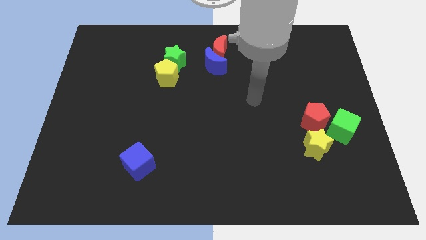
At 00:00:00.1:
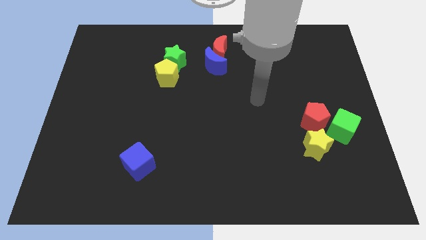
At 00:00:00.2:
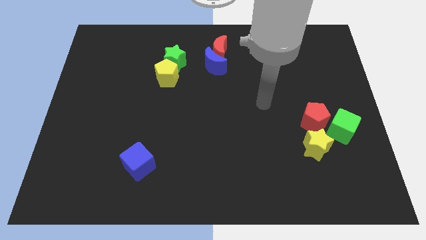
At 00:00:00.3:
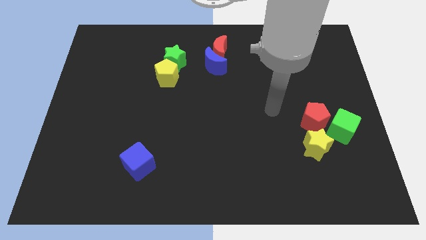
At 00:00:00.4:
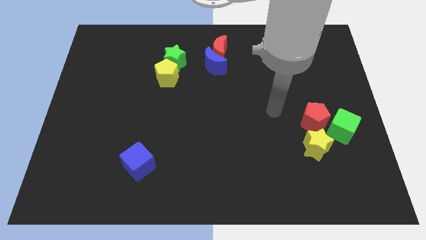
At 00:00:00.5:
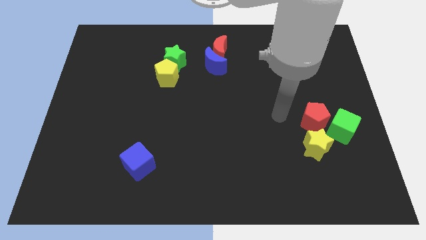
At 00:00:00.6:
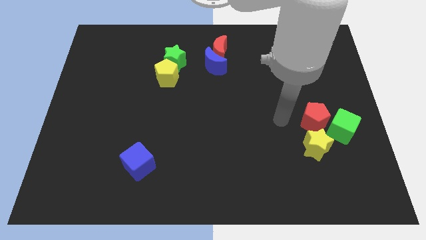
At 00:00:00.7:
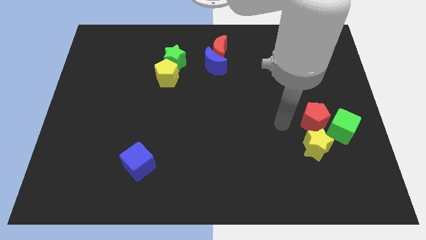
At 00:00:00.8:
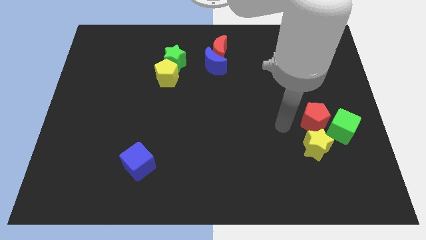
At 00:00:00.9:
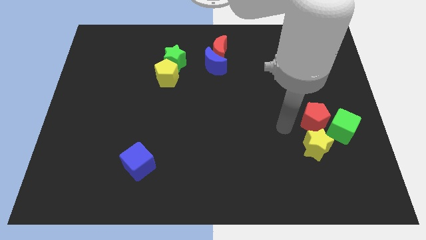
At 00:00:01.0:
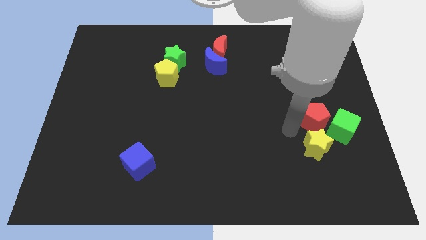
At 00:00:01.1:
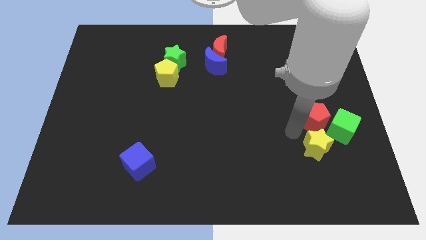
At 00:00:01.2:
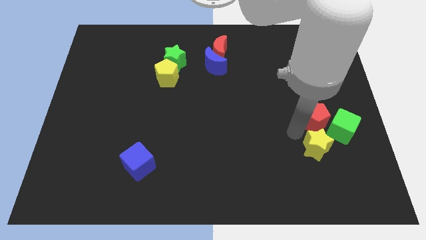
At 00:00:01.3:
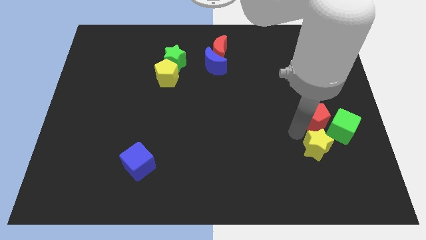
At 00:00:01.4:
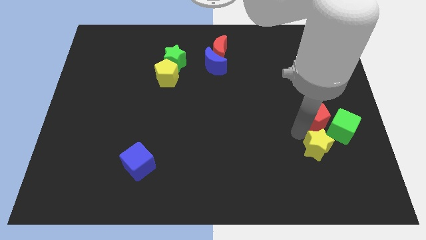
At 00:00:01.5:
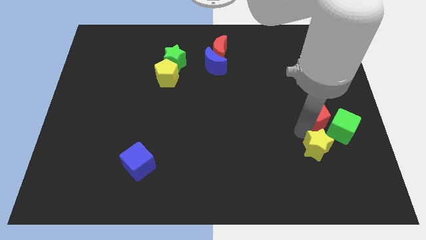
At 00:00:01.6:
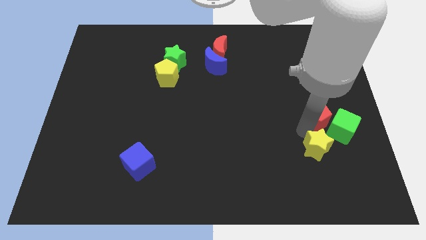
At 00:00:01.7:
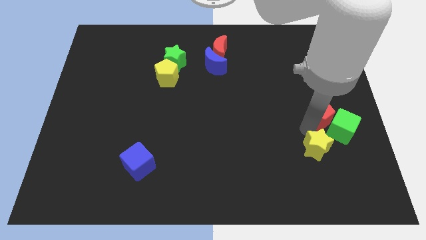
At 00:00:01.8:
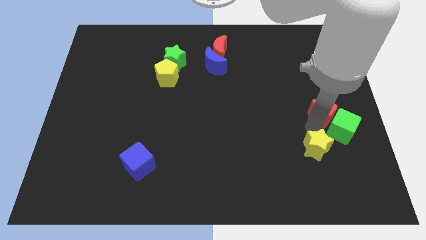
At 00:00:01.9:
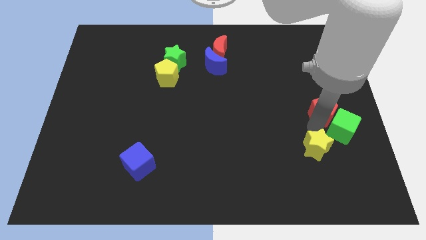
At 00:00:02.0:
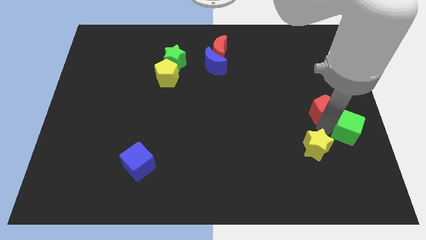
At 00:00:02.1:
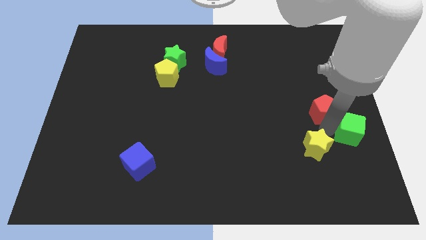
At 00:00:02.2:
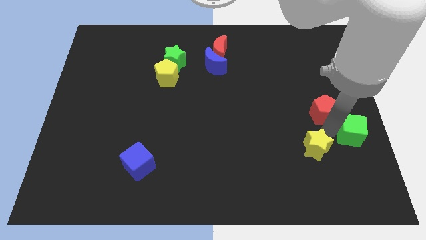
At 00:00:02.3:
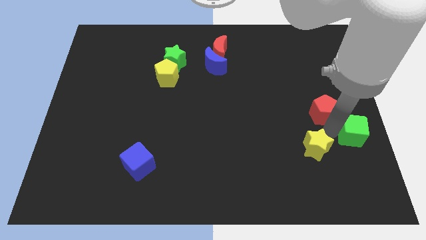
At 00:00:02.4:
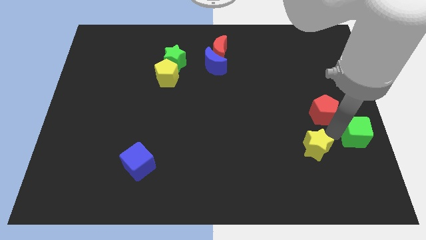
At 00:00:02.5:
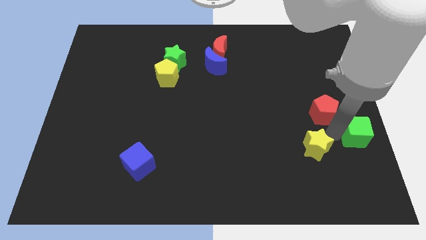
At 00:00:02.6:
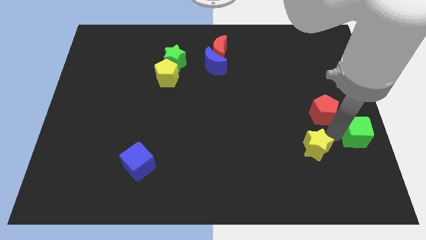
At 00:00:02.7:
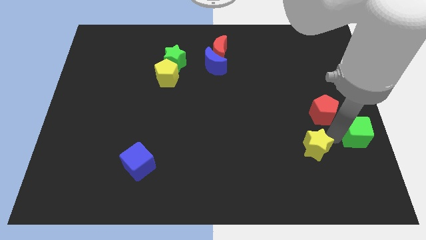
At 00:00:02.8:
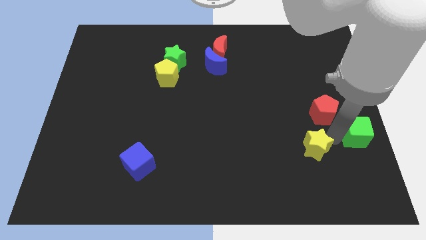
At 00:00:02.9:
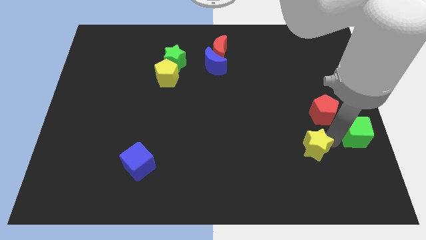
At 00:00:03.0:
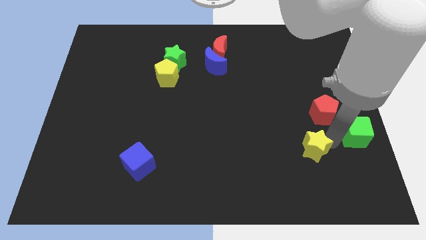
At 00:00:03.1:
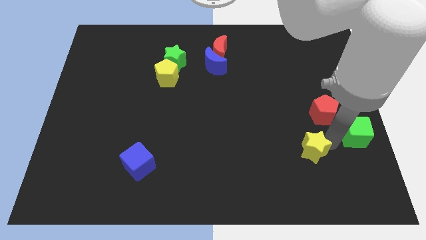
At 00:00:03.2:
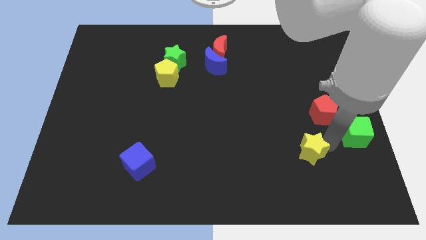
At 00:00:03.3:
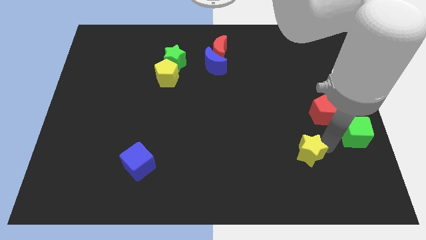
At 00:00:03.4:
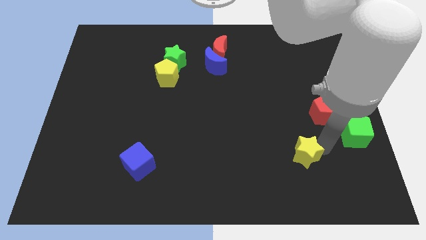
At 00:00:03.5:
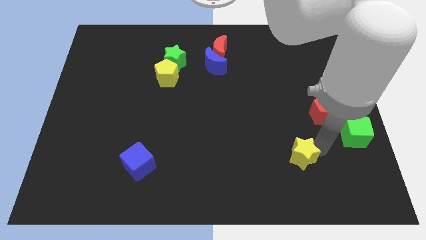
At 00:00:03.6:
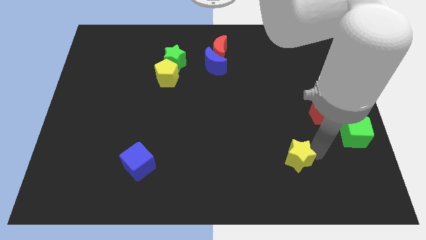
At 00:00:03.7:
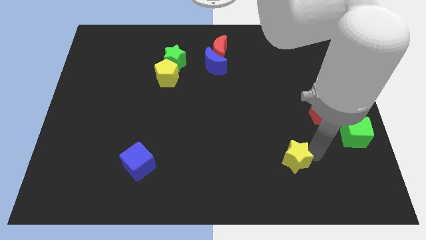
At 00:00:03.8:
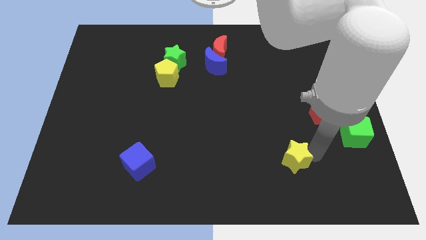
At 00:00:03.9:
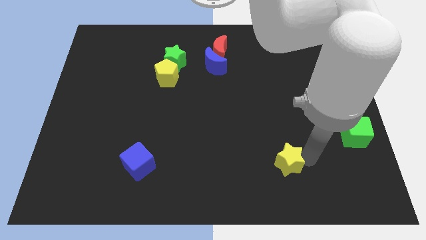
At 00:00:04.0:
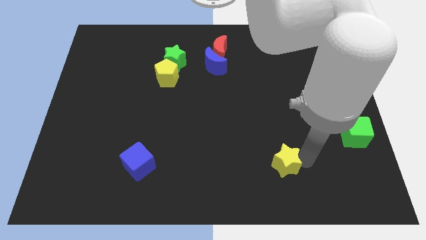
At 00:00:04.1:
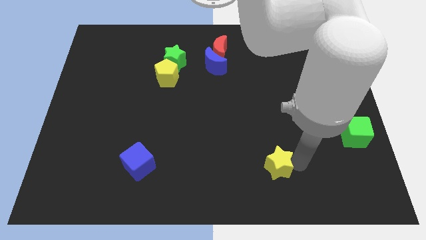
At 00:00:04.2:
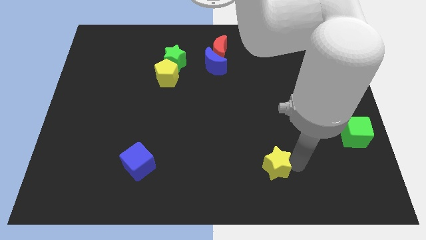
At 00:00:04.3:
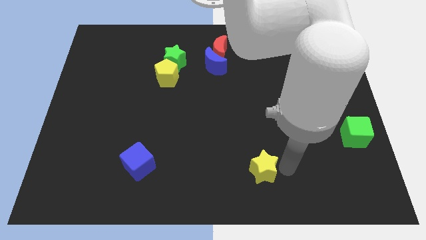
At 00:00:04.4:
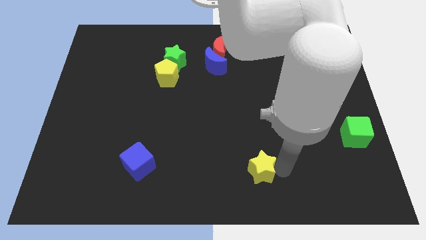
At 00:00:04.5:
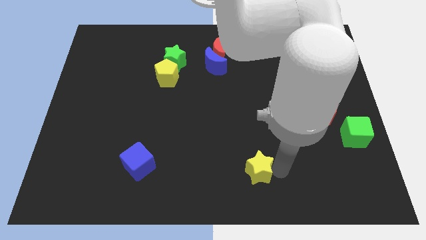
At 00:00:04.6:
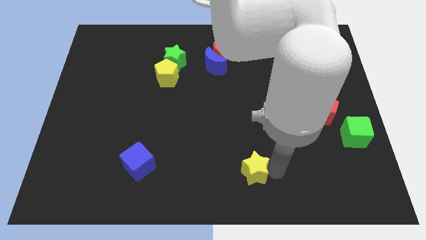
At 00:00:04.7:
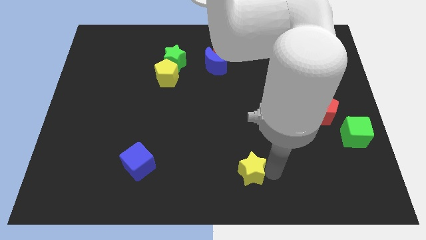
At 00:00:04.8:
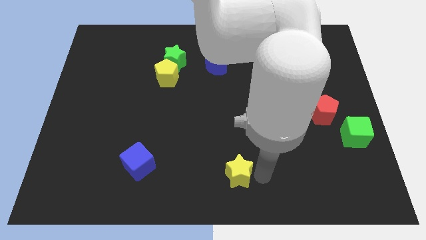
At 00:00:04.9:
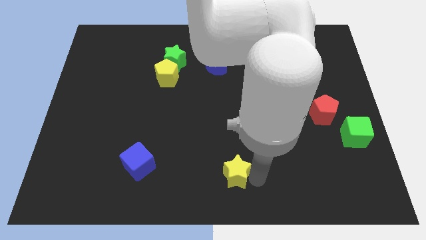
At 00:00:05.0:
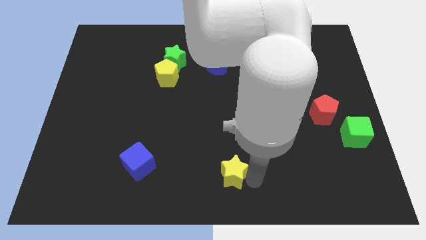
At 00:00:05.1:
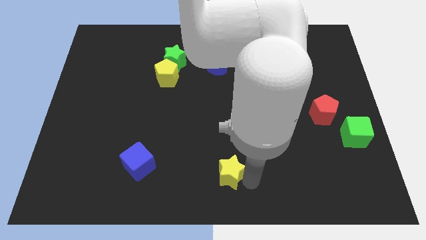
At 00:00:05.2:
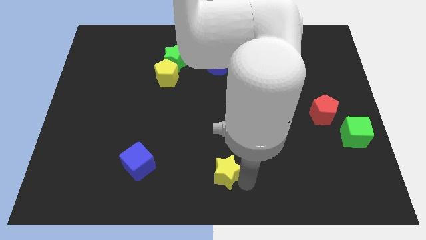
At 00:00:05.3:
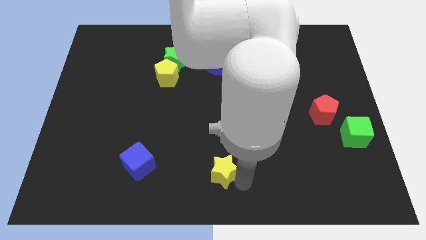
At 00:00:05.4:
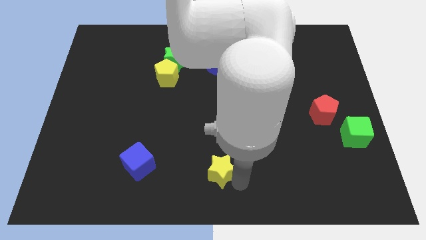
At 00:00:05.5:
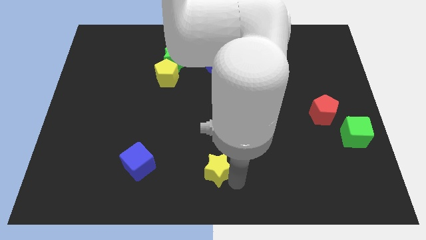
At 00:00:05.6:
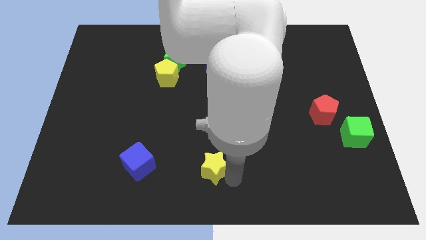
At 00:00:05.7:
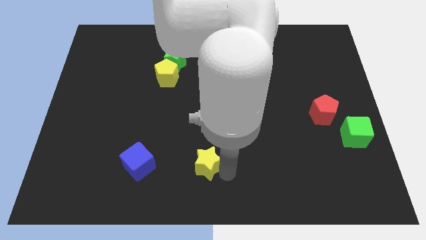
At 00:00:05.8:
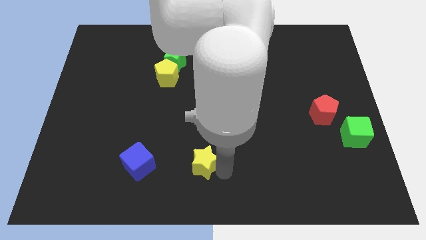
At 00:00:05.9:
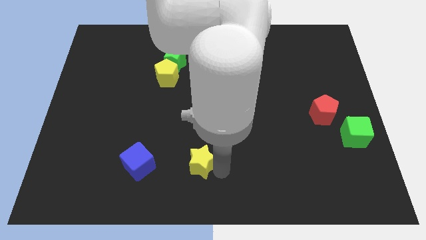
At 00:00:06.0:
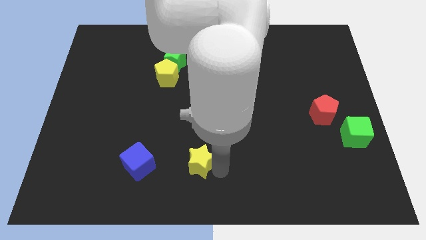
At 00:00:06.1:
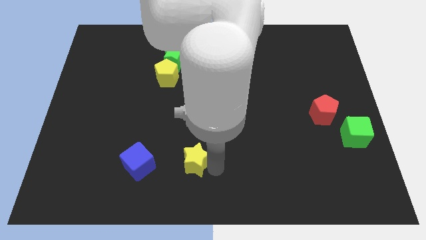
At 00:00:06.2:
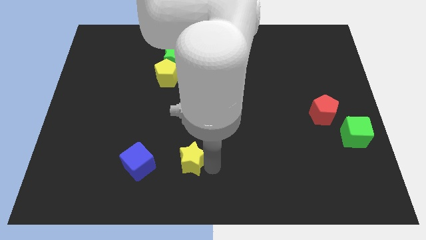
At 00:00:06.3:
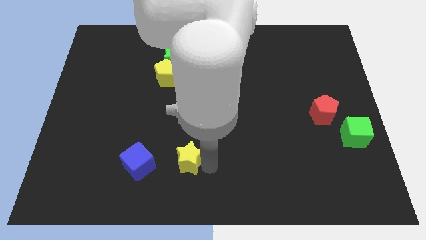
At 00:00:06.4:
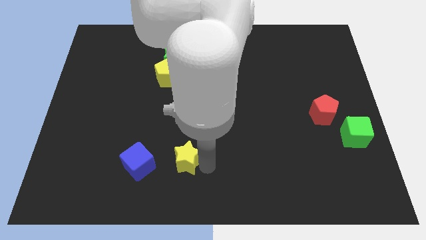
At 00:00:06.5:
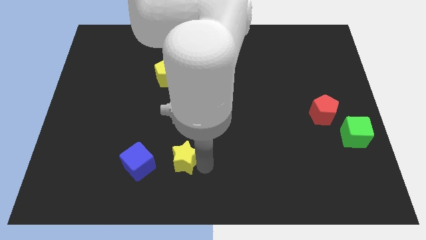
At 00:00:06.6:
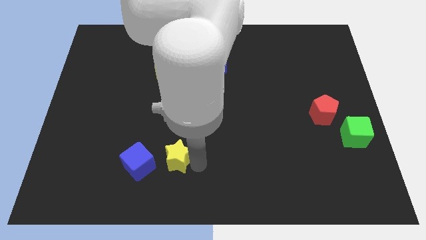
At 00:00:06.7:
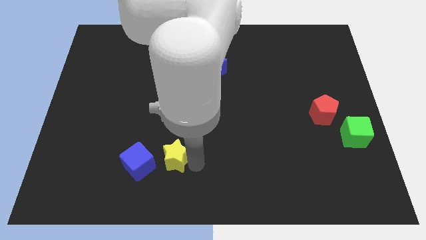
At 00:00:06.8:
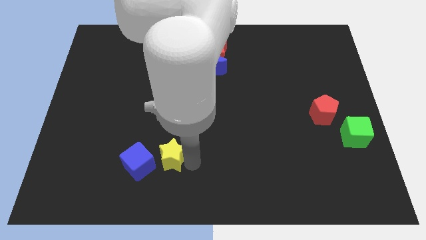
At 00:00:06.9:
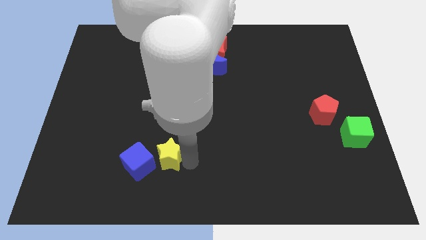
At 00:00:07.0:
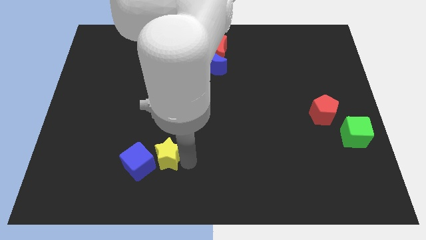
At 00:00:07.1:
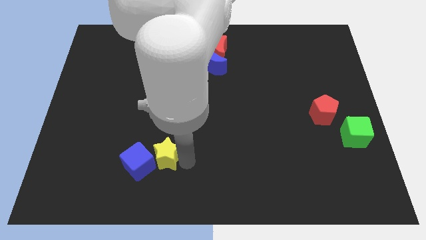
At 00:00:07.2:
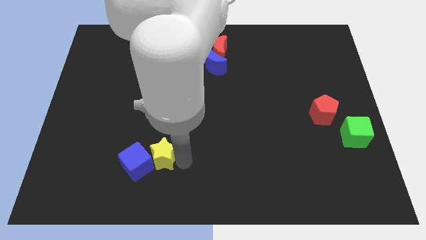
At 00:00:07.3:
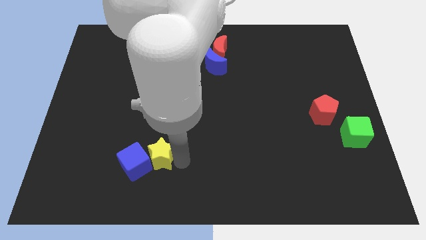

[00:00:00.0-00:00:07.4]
put the yellow star close to the blue cube

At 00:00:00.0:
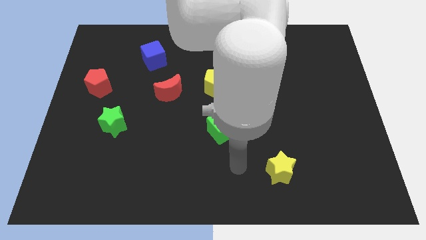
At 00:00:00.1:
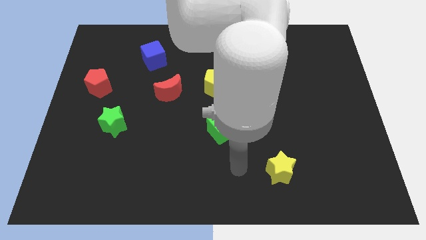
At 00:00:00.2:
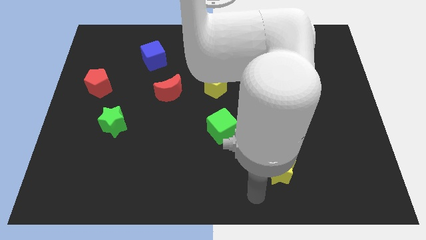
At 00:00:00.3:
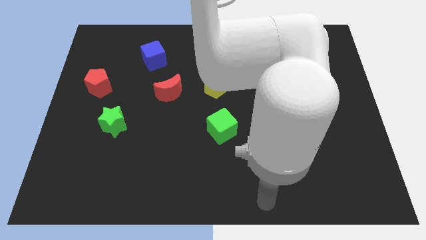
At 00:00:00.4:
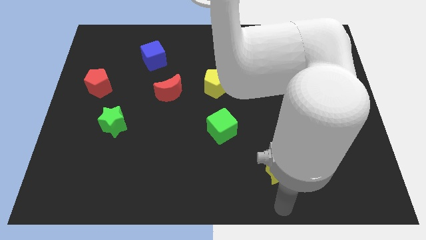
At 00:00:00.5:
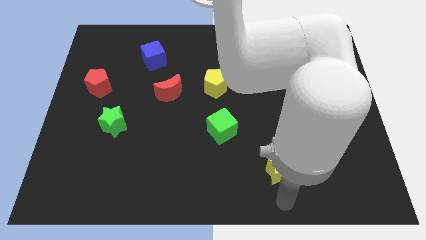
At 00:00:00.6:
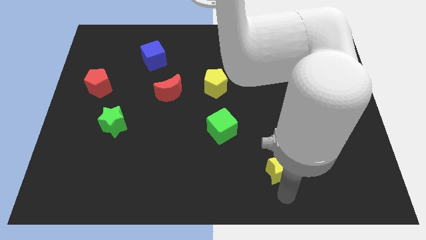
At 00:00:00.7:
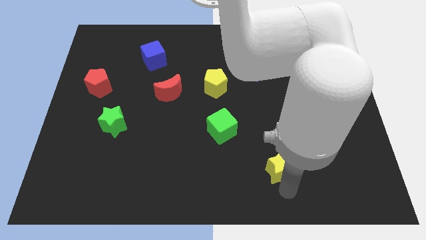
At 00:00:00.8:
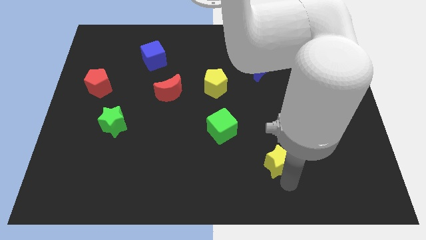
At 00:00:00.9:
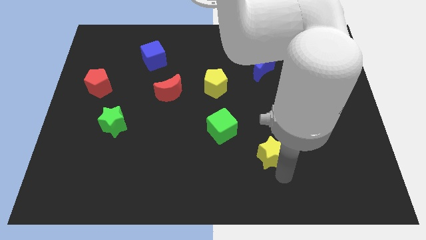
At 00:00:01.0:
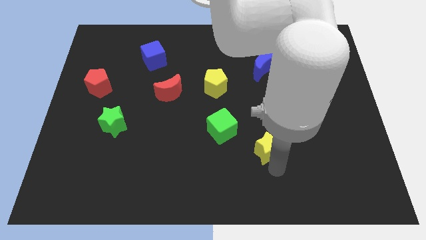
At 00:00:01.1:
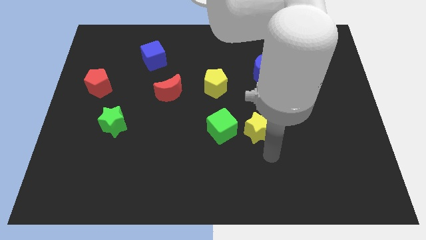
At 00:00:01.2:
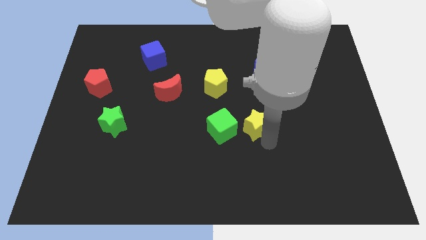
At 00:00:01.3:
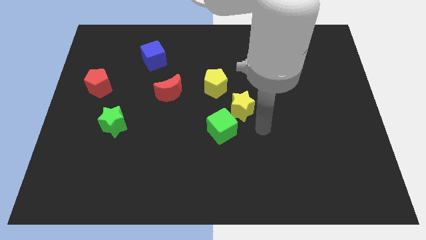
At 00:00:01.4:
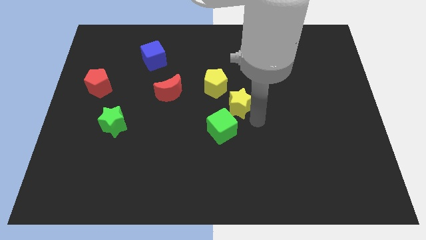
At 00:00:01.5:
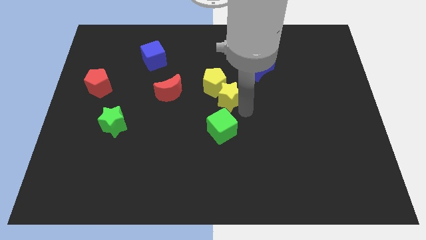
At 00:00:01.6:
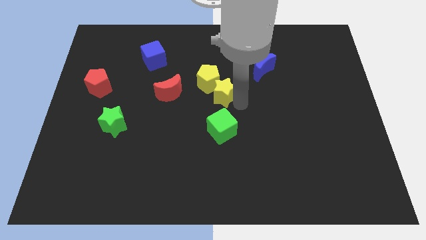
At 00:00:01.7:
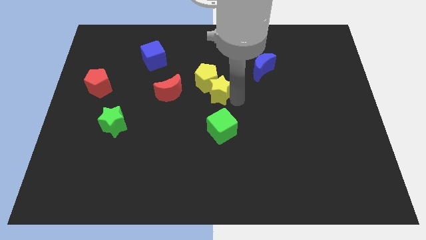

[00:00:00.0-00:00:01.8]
push the yellow star towards the yellow pentagon
